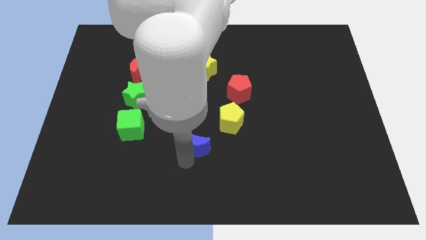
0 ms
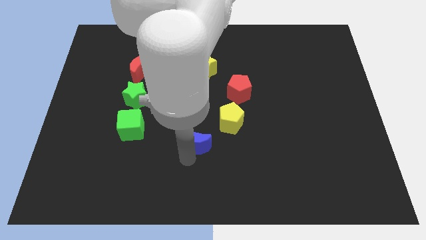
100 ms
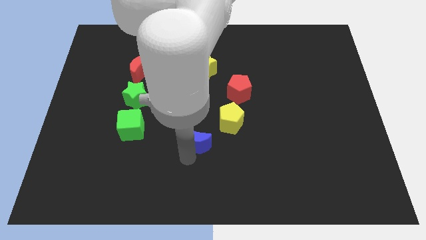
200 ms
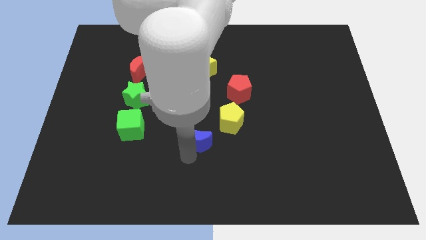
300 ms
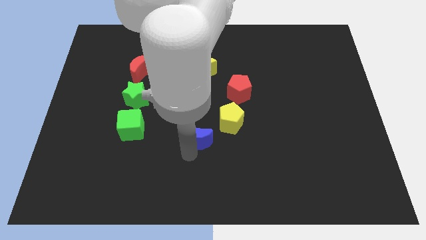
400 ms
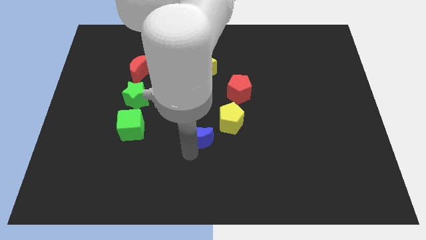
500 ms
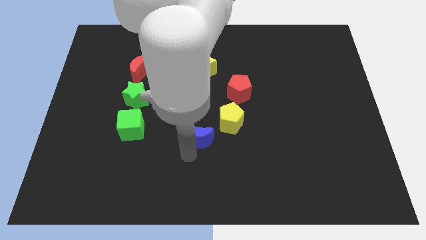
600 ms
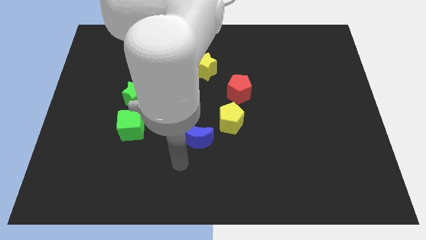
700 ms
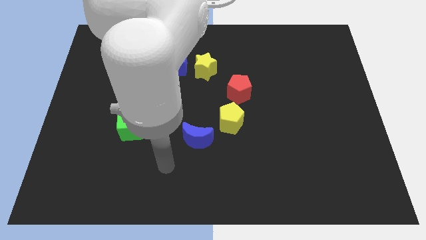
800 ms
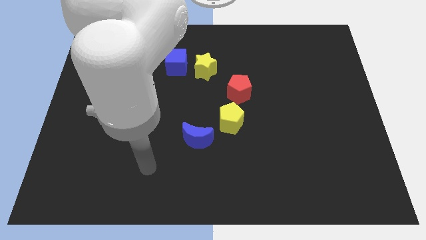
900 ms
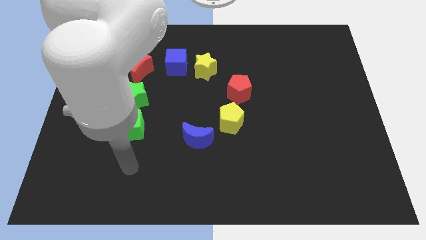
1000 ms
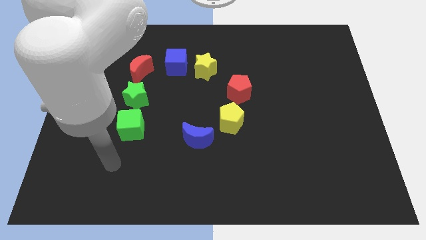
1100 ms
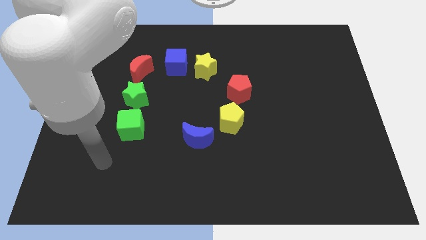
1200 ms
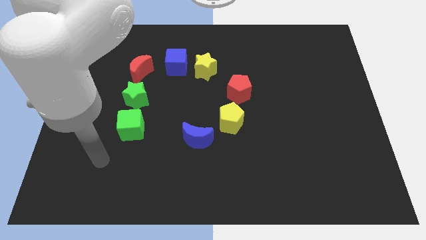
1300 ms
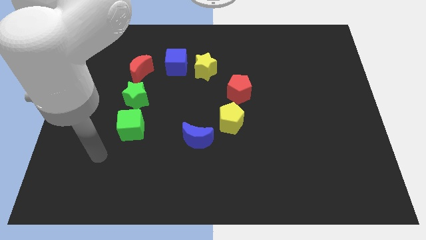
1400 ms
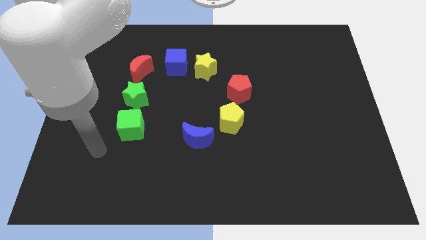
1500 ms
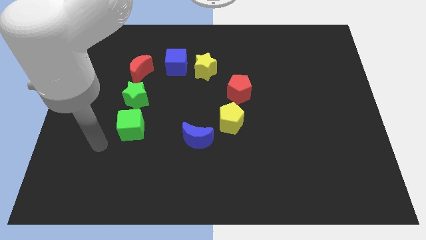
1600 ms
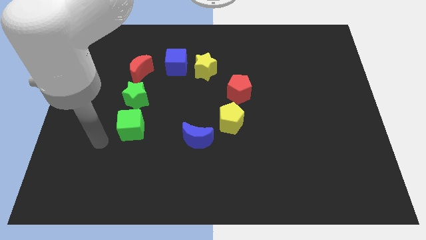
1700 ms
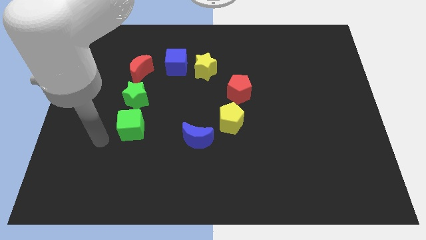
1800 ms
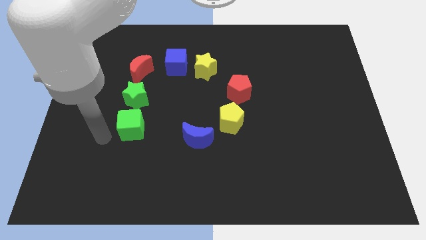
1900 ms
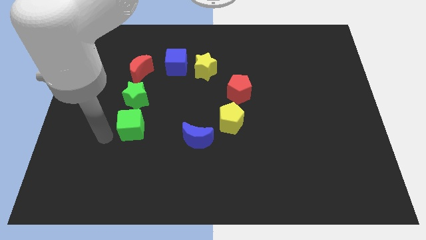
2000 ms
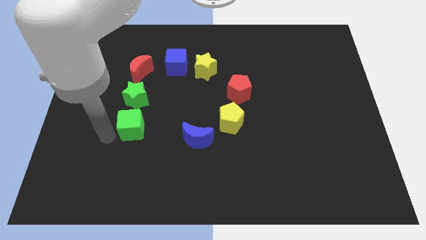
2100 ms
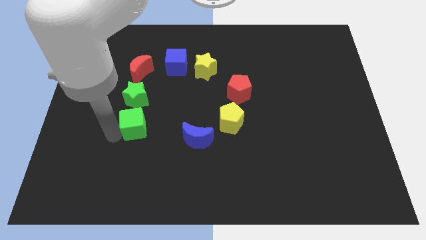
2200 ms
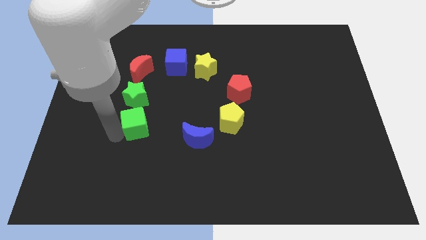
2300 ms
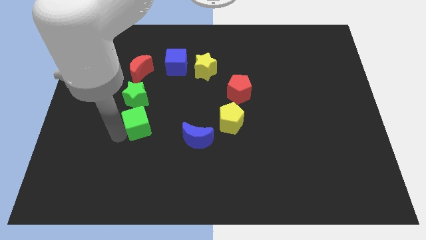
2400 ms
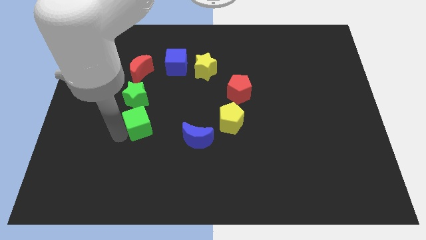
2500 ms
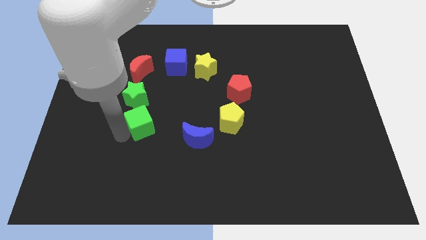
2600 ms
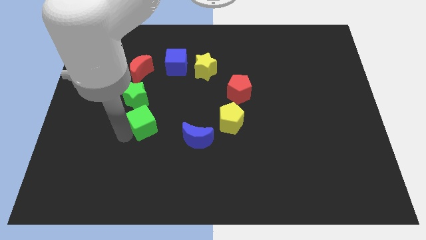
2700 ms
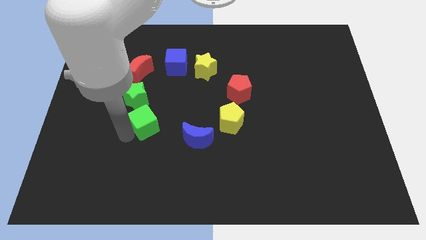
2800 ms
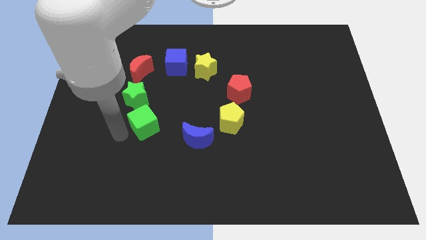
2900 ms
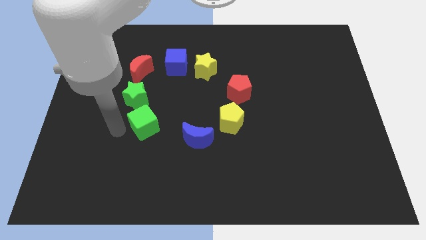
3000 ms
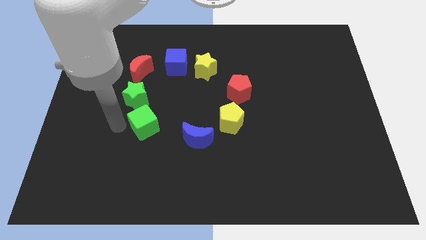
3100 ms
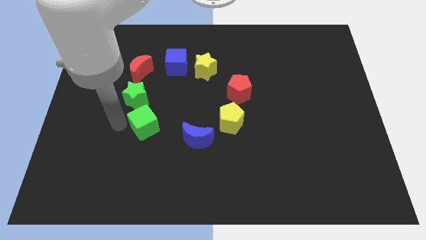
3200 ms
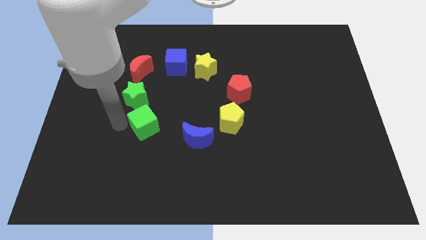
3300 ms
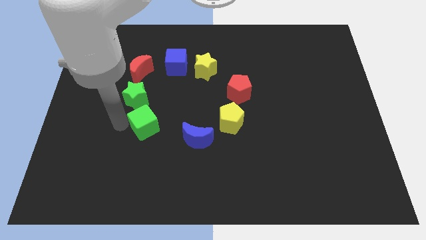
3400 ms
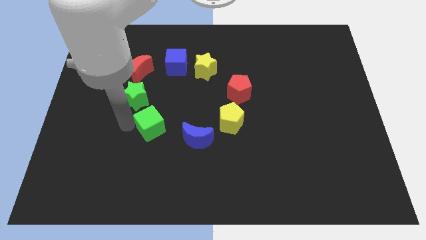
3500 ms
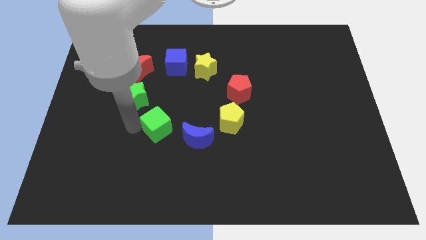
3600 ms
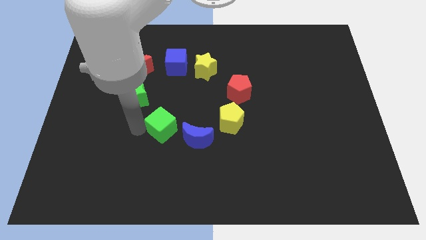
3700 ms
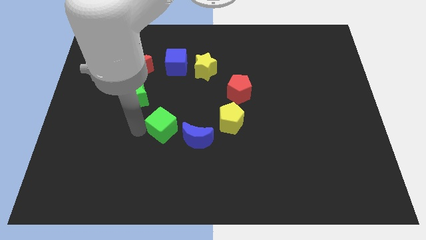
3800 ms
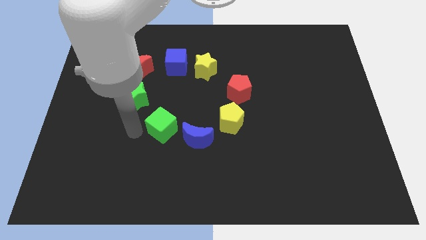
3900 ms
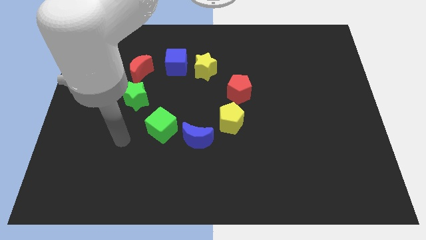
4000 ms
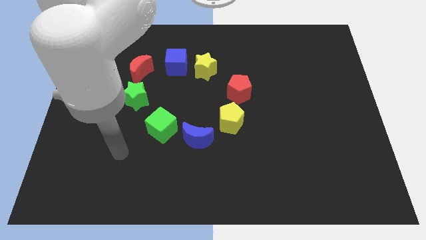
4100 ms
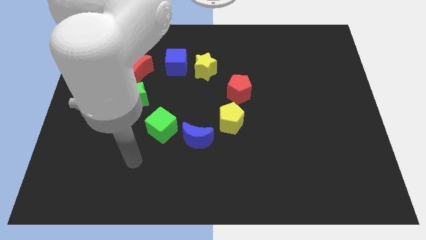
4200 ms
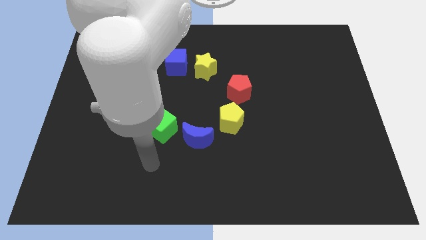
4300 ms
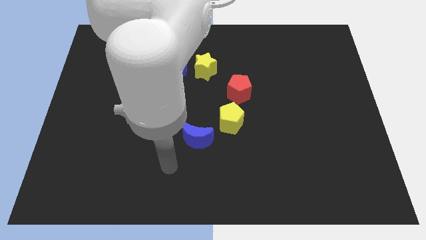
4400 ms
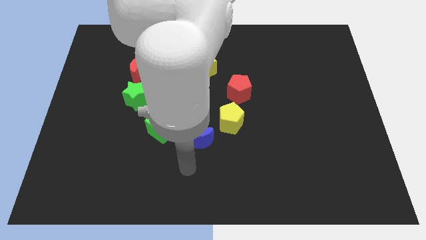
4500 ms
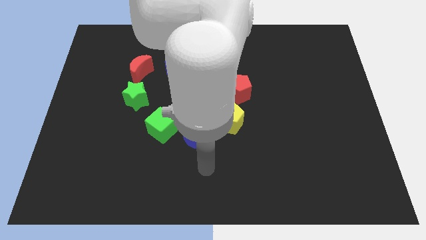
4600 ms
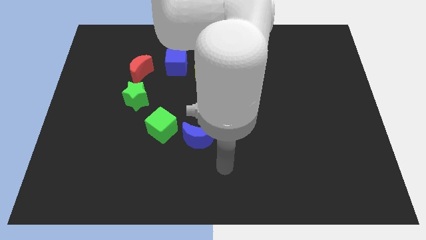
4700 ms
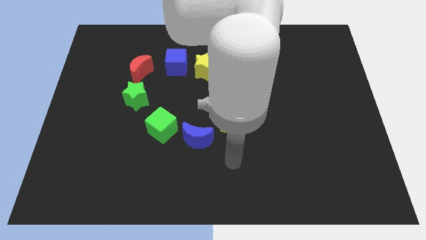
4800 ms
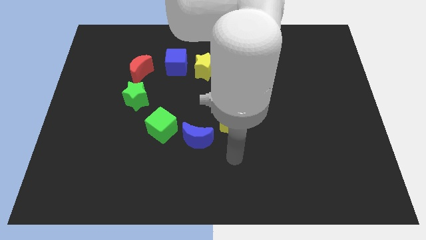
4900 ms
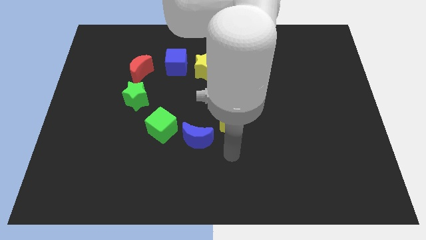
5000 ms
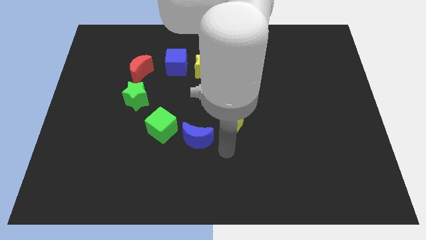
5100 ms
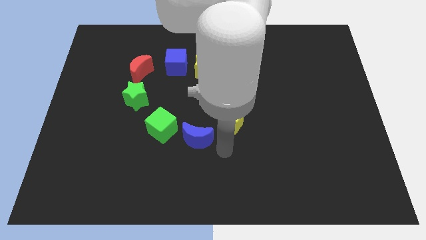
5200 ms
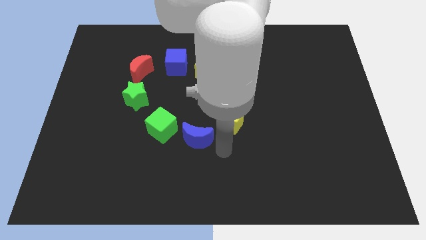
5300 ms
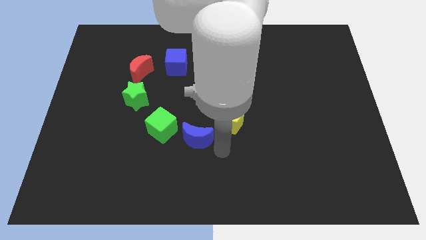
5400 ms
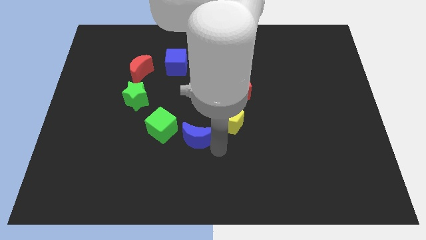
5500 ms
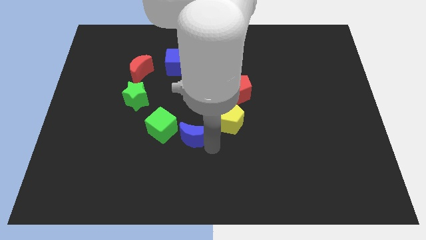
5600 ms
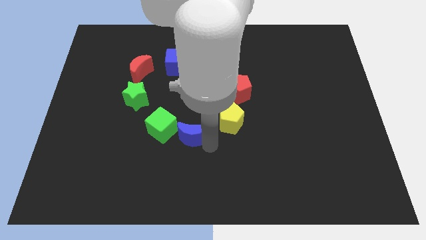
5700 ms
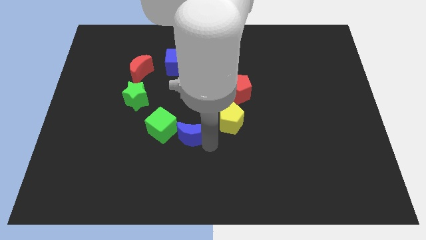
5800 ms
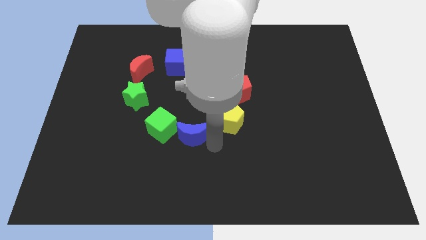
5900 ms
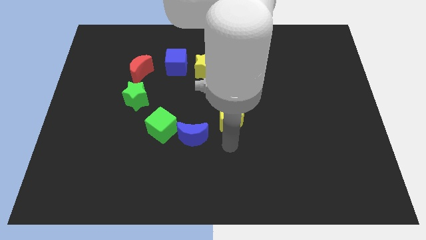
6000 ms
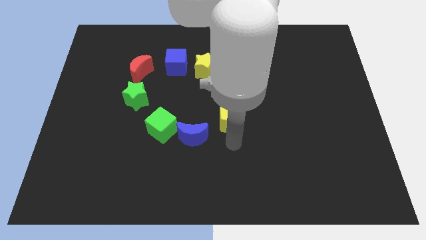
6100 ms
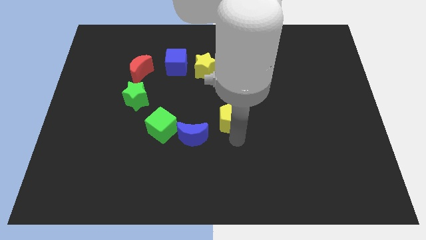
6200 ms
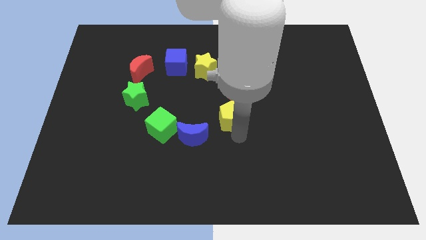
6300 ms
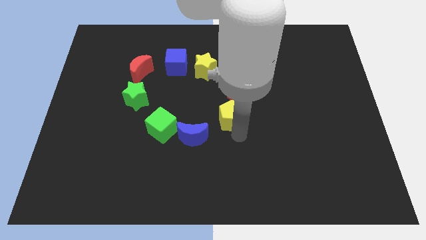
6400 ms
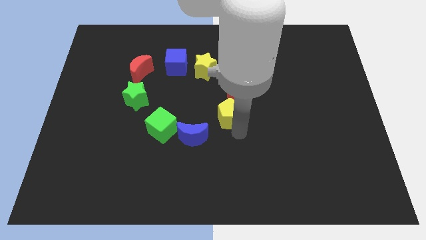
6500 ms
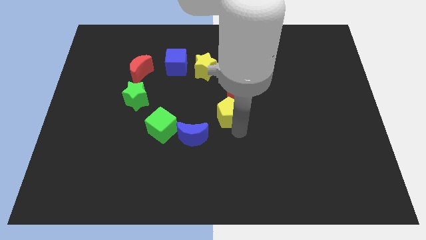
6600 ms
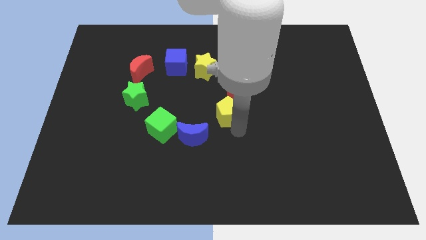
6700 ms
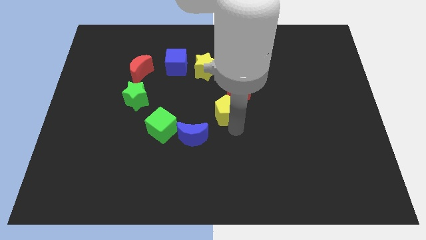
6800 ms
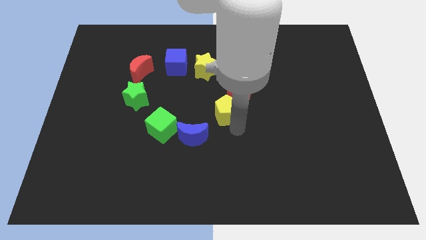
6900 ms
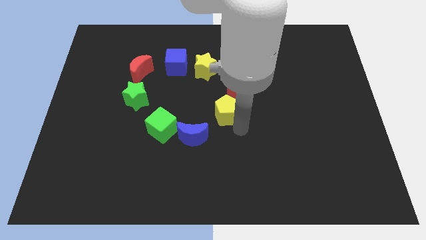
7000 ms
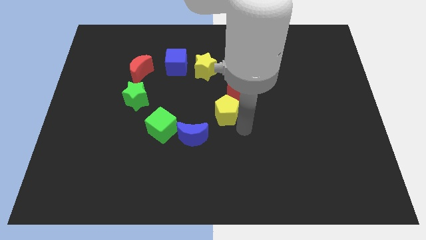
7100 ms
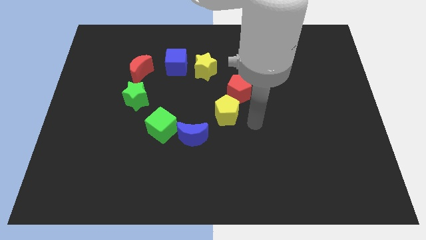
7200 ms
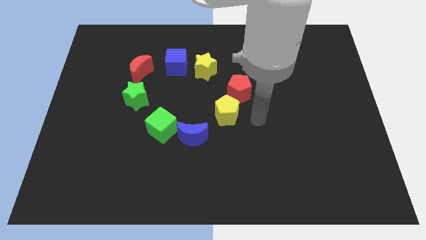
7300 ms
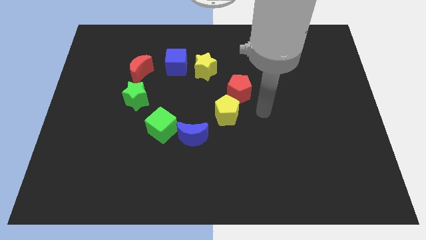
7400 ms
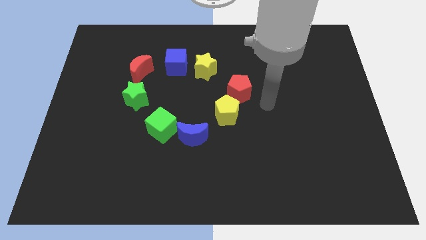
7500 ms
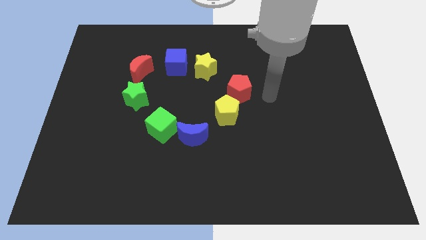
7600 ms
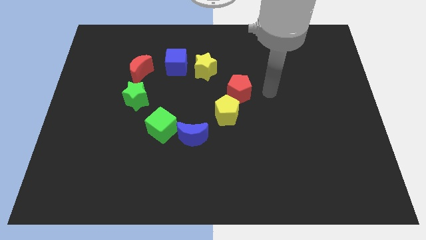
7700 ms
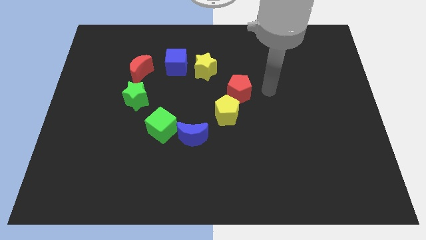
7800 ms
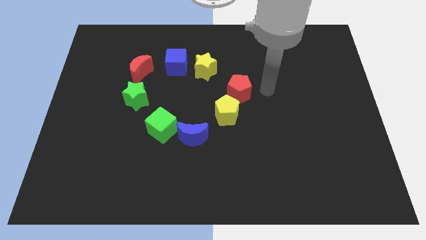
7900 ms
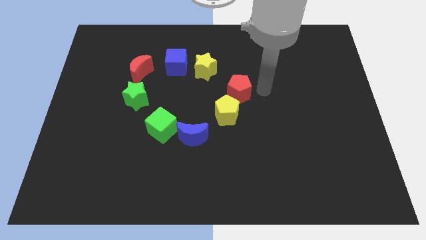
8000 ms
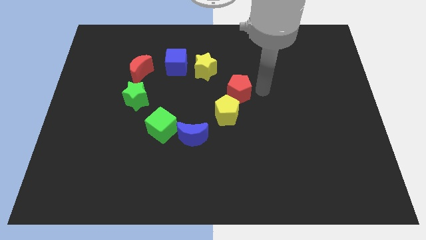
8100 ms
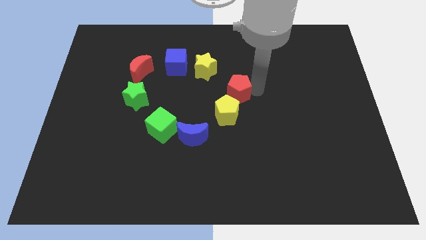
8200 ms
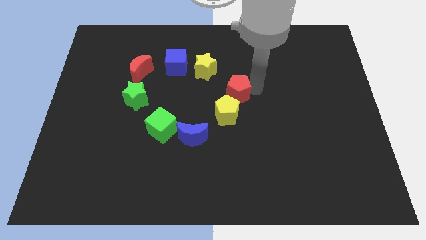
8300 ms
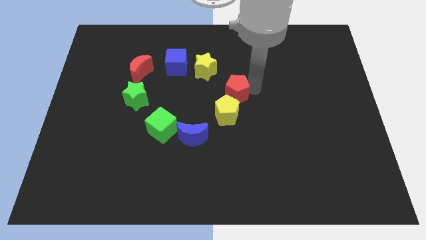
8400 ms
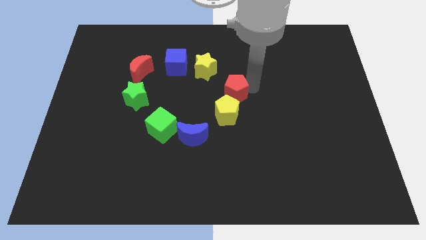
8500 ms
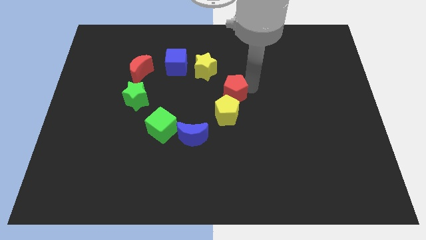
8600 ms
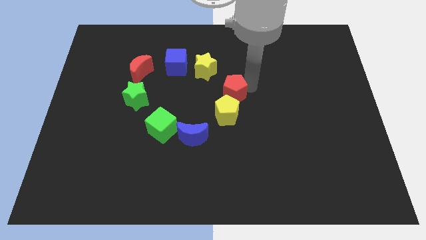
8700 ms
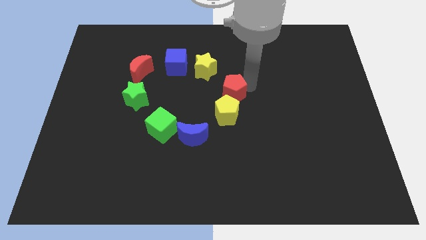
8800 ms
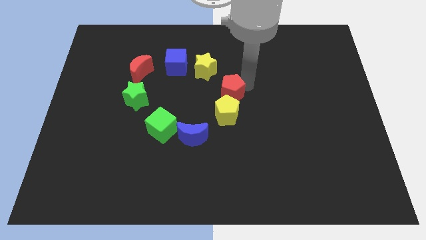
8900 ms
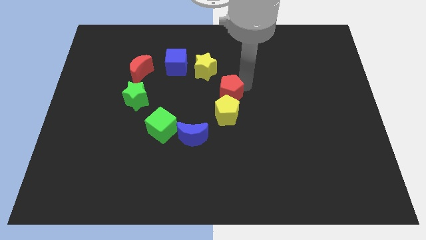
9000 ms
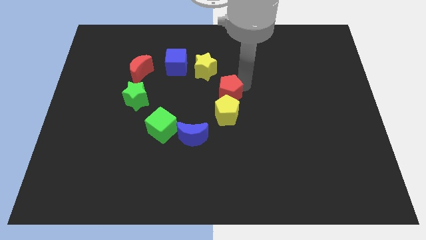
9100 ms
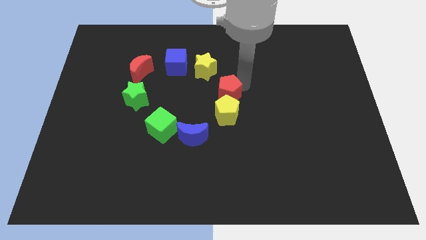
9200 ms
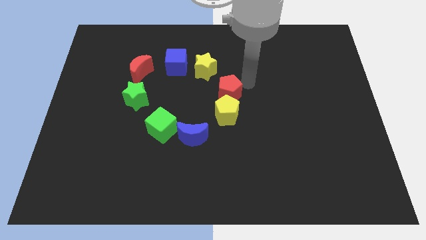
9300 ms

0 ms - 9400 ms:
put all blocks in a circular line
